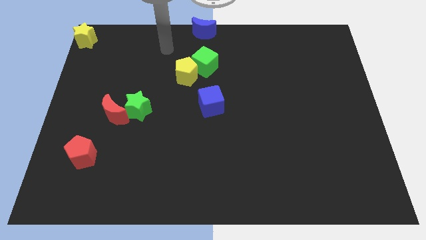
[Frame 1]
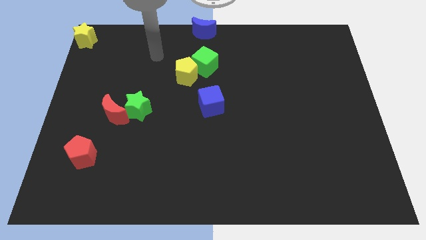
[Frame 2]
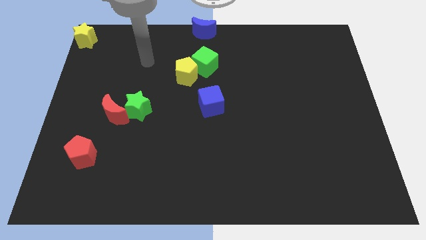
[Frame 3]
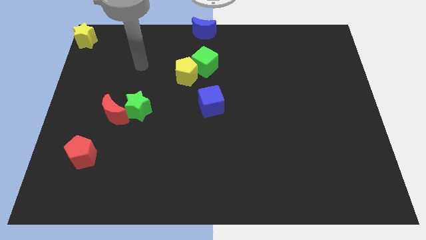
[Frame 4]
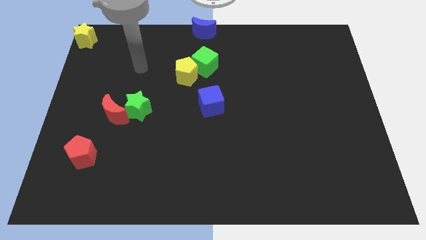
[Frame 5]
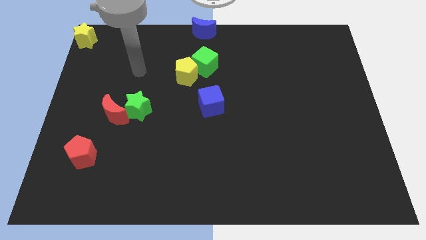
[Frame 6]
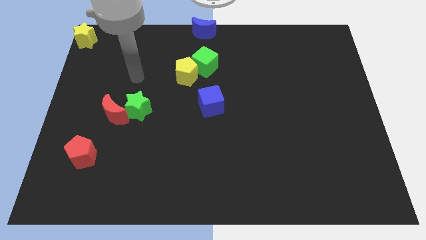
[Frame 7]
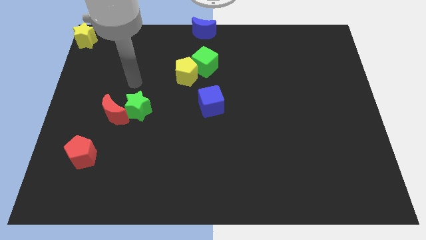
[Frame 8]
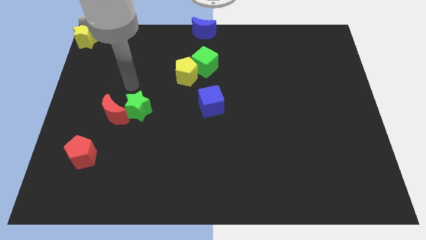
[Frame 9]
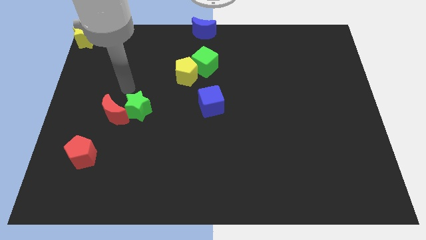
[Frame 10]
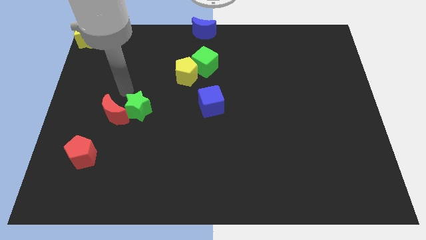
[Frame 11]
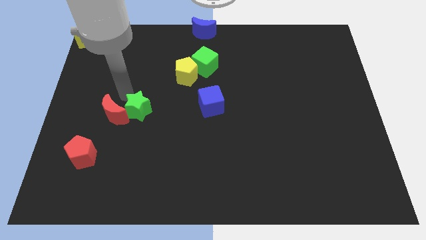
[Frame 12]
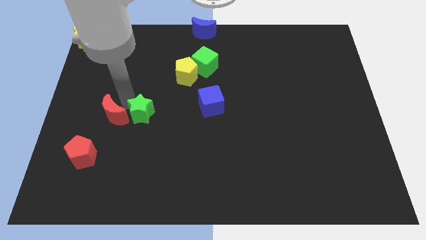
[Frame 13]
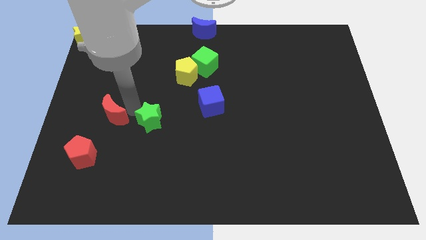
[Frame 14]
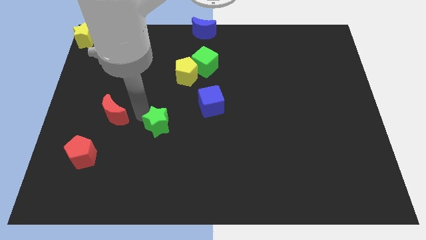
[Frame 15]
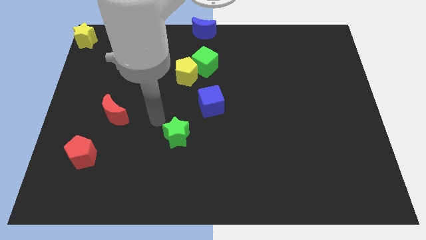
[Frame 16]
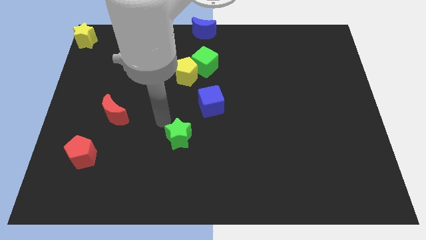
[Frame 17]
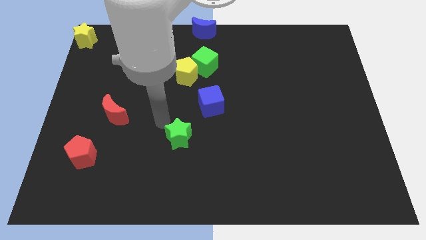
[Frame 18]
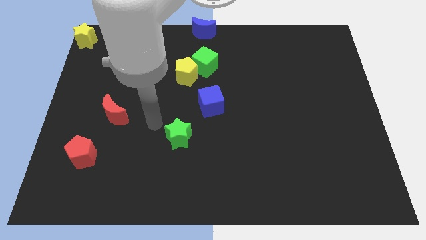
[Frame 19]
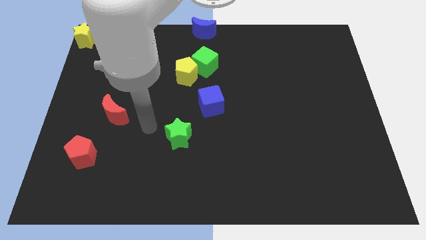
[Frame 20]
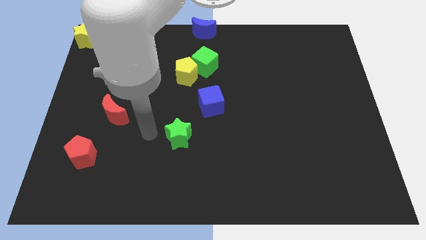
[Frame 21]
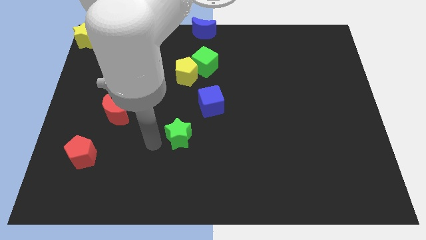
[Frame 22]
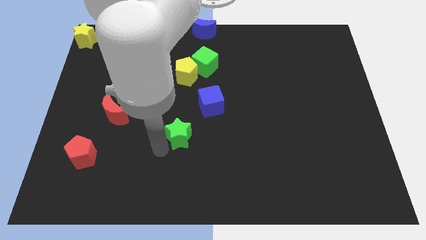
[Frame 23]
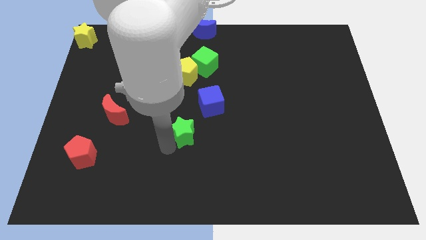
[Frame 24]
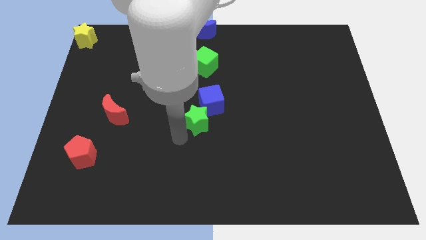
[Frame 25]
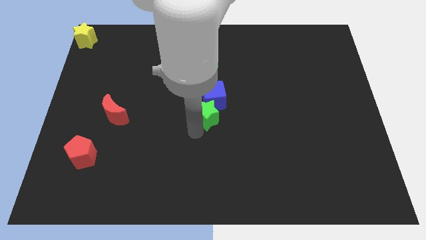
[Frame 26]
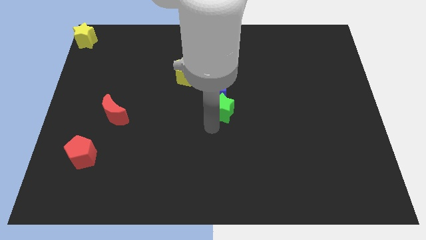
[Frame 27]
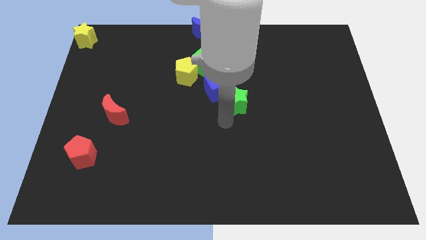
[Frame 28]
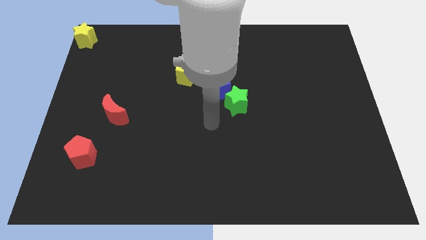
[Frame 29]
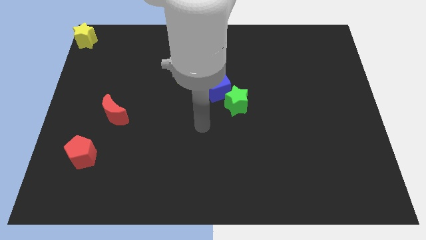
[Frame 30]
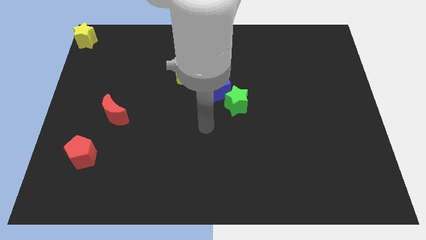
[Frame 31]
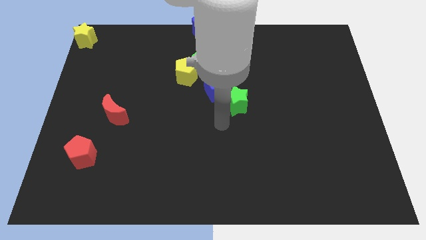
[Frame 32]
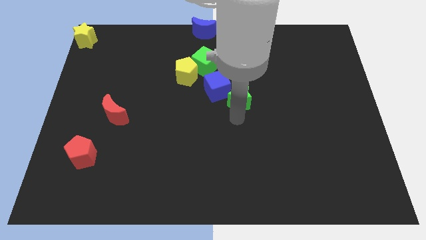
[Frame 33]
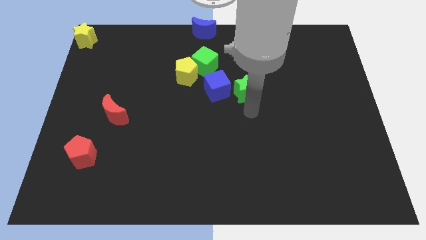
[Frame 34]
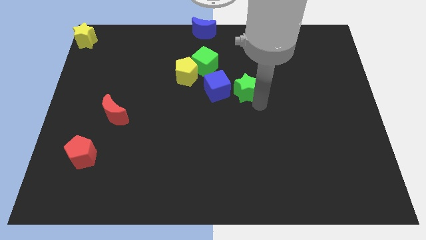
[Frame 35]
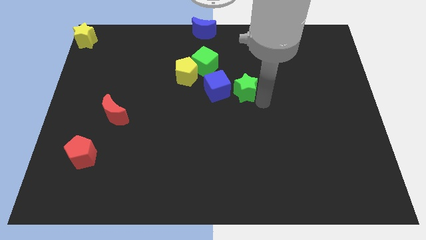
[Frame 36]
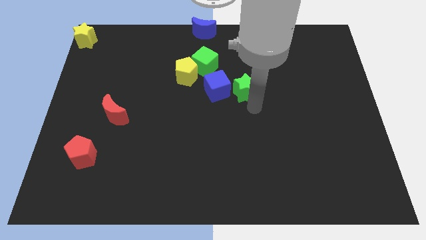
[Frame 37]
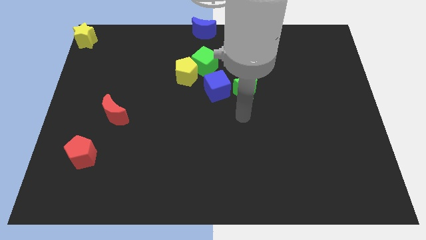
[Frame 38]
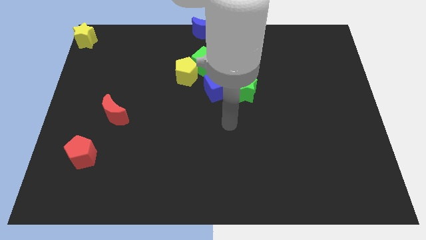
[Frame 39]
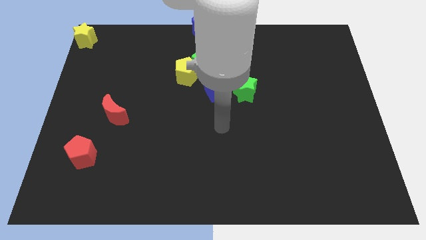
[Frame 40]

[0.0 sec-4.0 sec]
push the green star to the right of blue cube

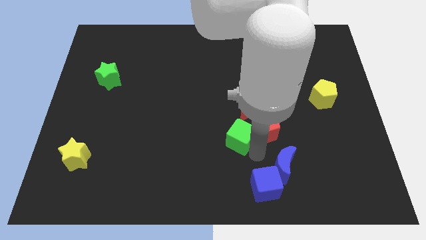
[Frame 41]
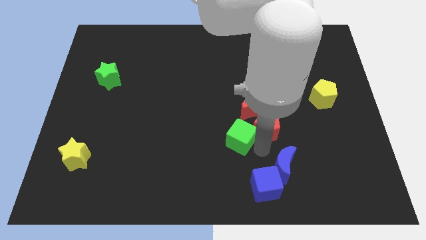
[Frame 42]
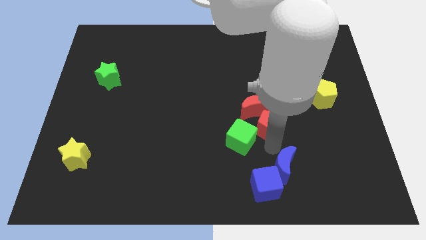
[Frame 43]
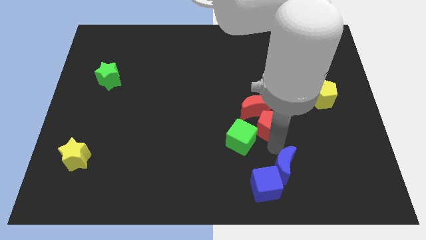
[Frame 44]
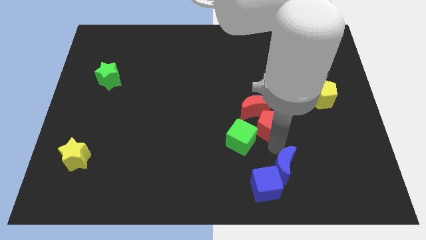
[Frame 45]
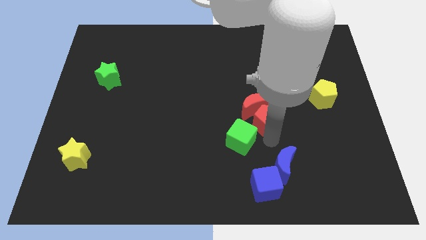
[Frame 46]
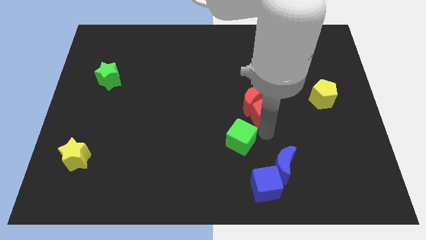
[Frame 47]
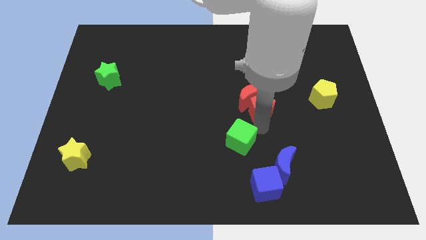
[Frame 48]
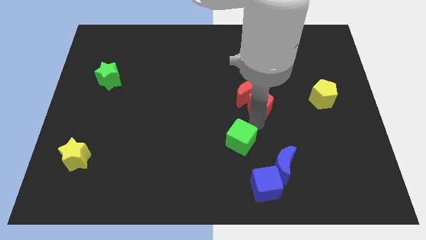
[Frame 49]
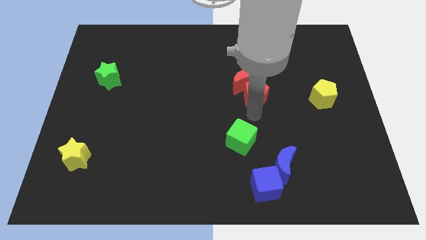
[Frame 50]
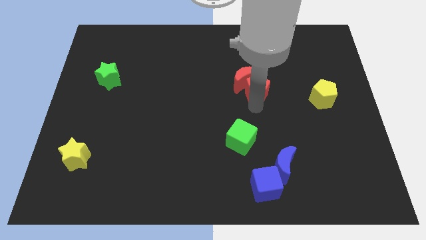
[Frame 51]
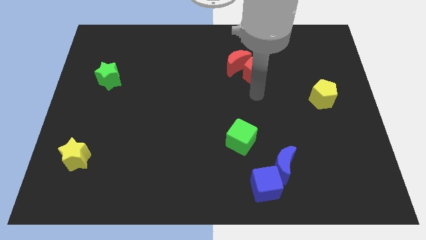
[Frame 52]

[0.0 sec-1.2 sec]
move the red blocks towards the top

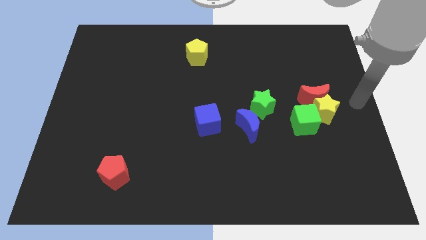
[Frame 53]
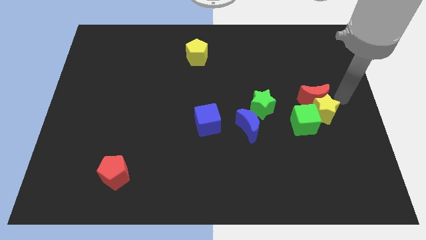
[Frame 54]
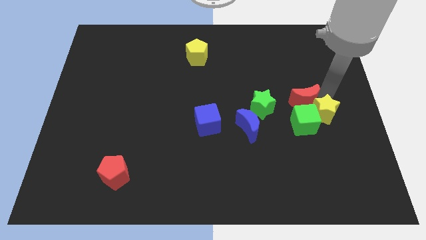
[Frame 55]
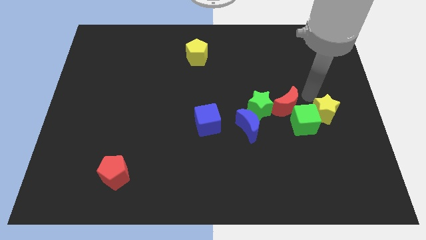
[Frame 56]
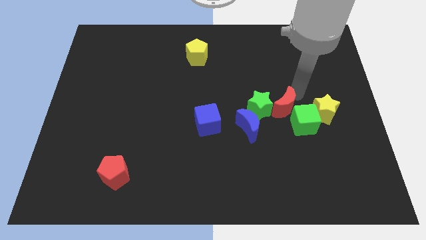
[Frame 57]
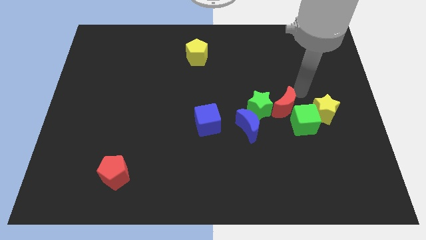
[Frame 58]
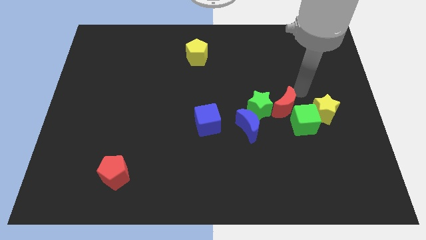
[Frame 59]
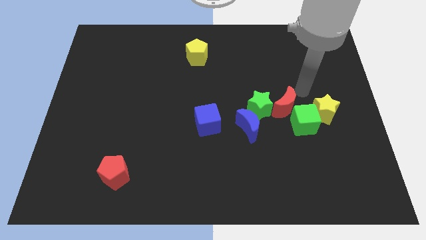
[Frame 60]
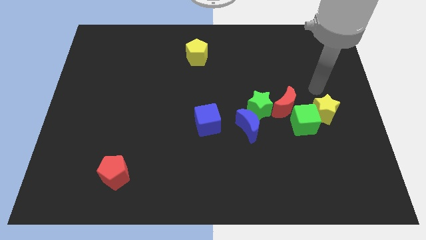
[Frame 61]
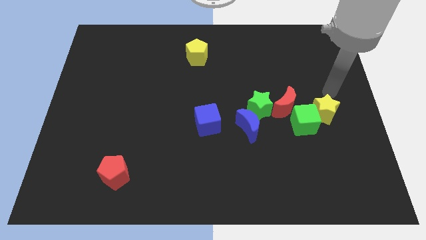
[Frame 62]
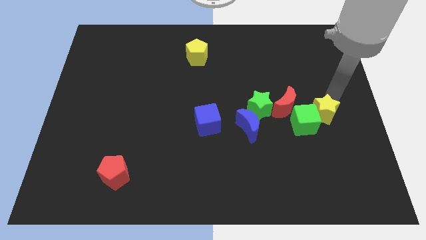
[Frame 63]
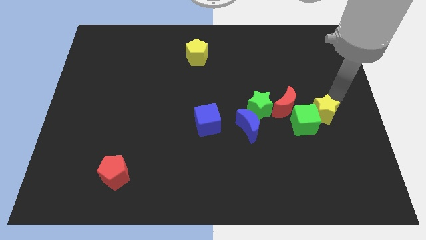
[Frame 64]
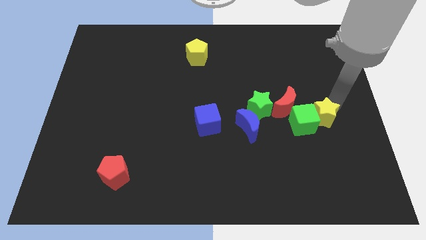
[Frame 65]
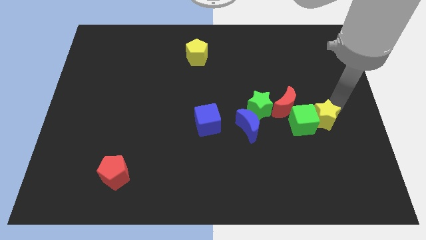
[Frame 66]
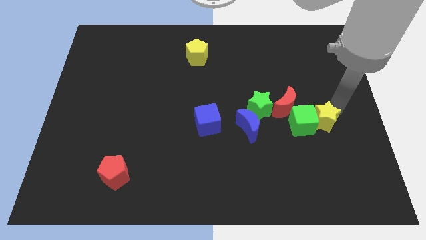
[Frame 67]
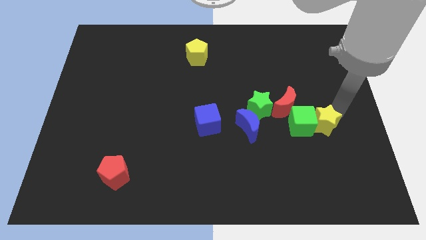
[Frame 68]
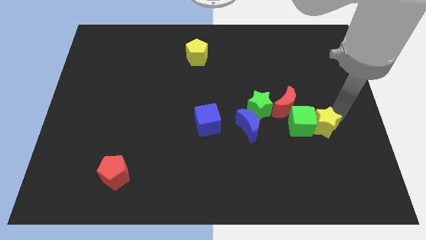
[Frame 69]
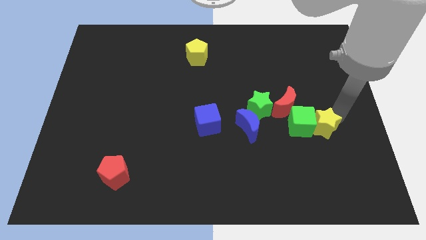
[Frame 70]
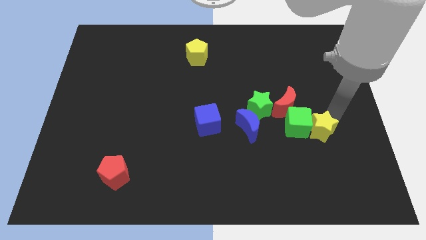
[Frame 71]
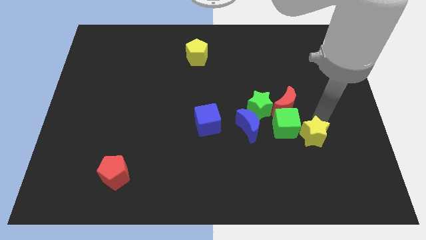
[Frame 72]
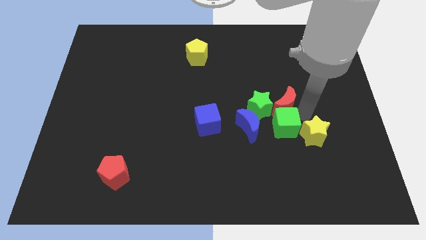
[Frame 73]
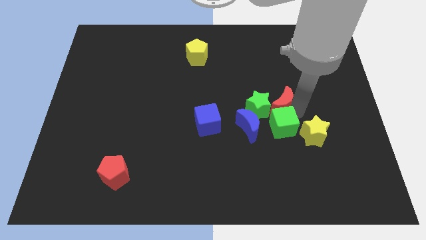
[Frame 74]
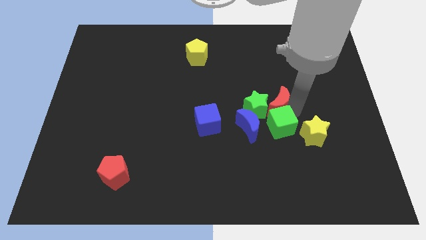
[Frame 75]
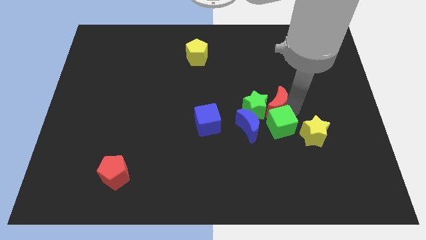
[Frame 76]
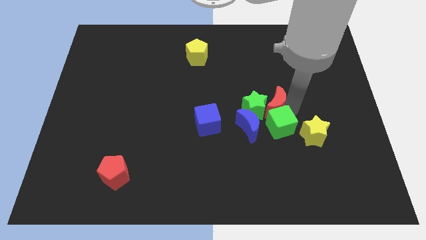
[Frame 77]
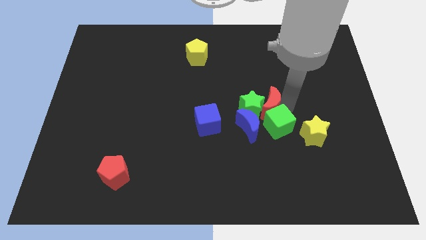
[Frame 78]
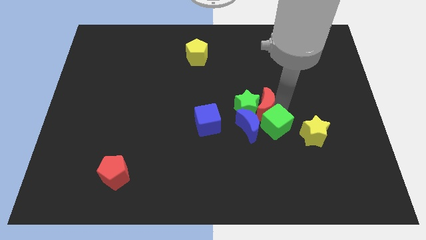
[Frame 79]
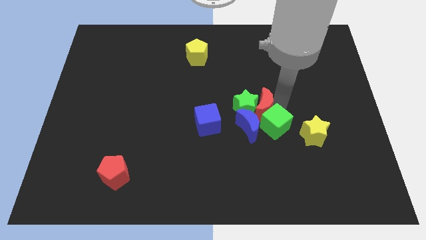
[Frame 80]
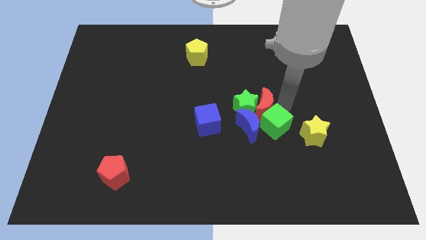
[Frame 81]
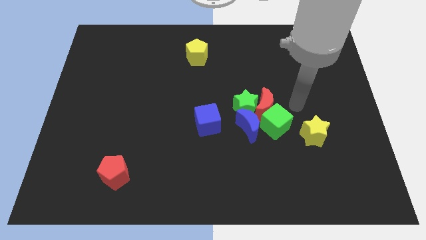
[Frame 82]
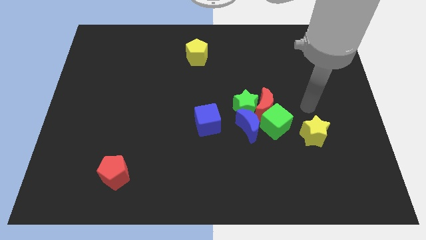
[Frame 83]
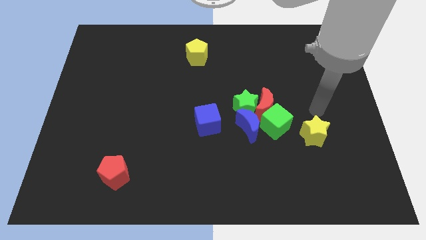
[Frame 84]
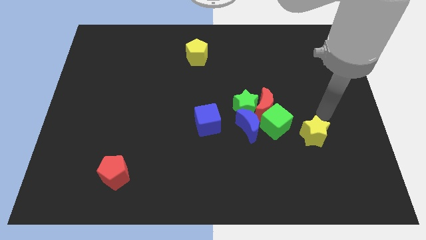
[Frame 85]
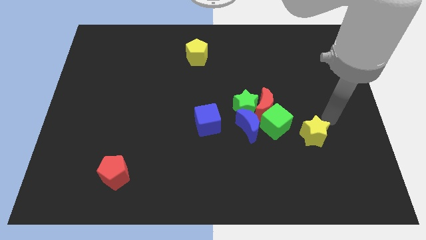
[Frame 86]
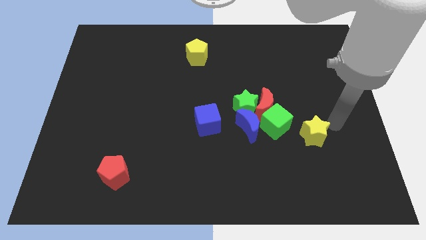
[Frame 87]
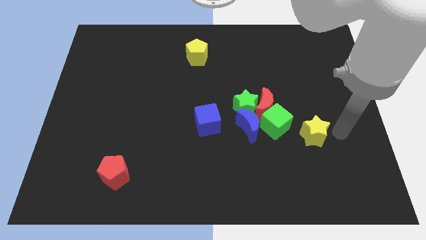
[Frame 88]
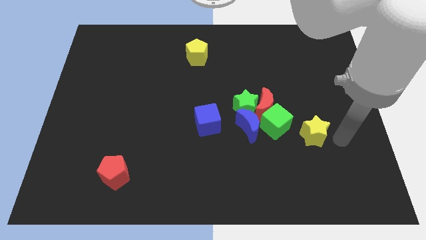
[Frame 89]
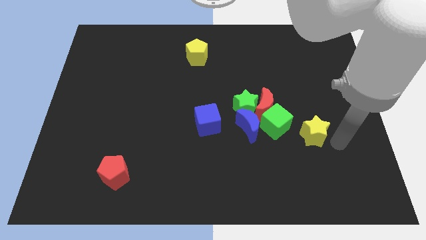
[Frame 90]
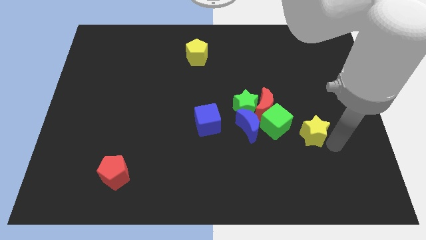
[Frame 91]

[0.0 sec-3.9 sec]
place your arm near to the yellow star
